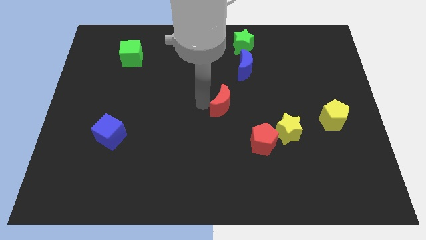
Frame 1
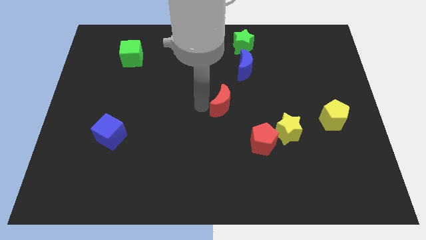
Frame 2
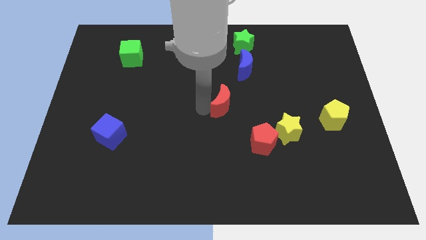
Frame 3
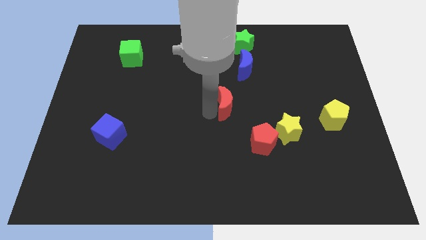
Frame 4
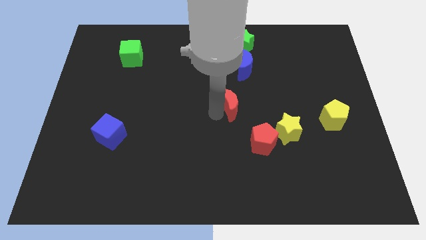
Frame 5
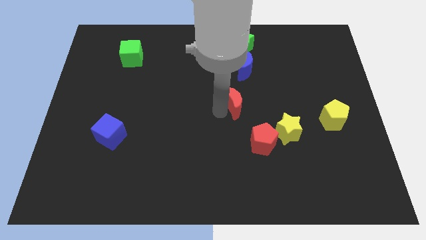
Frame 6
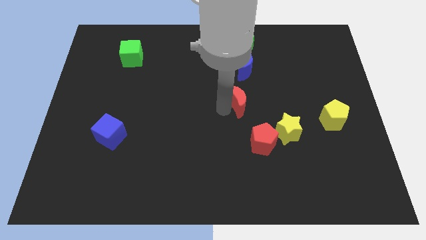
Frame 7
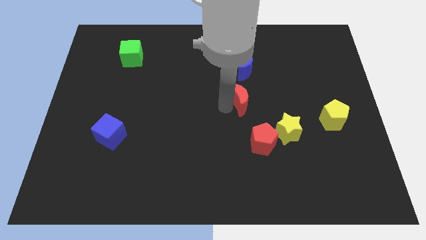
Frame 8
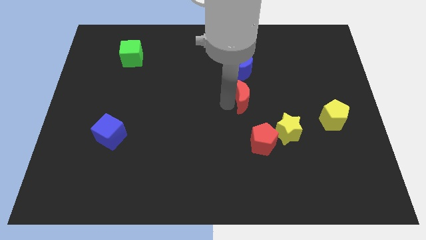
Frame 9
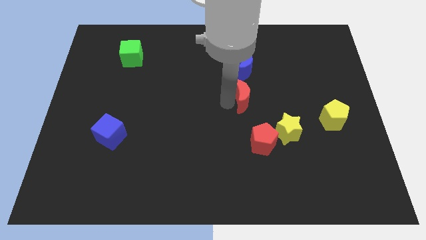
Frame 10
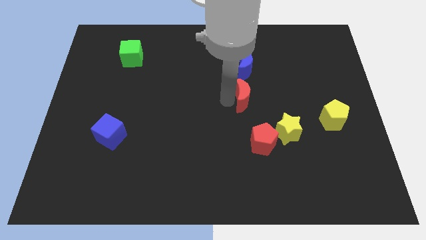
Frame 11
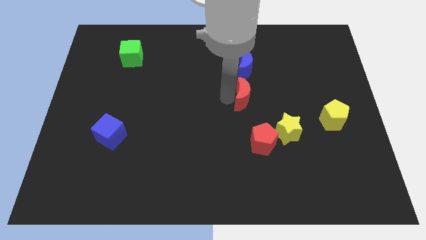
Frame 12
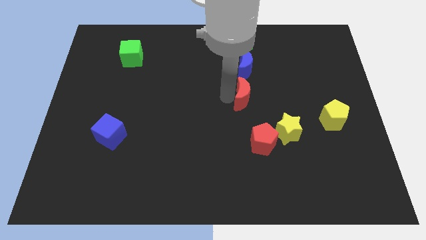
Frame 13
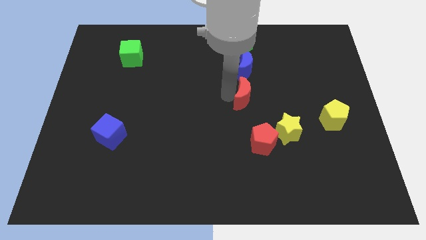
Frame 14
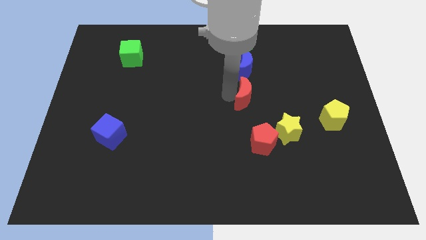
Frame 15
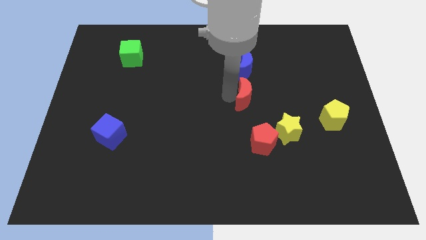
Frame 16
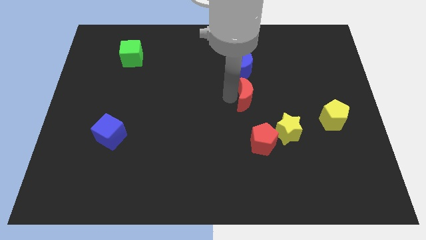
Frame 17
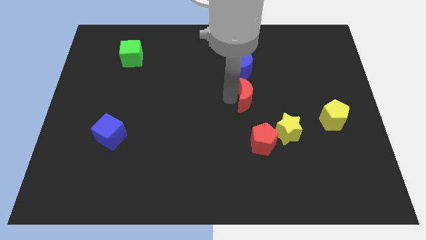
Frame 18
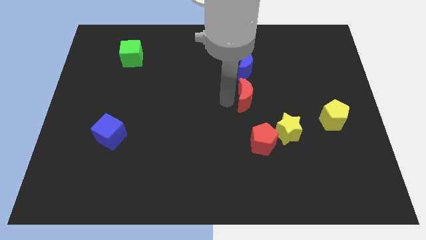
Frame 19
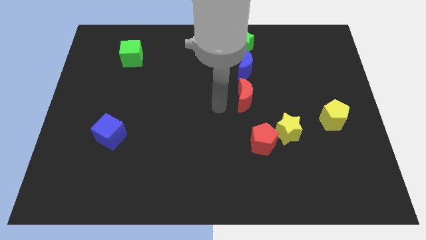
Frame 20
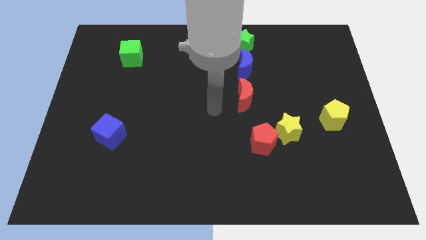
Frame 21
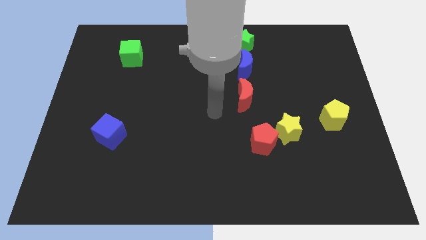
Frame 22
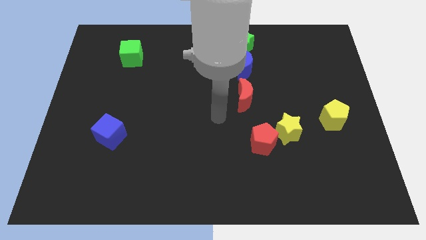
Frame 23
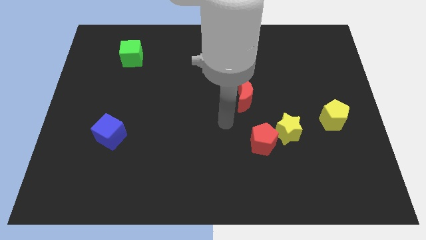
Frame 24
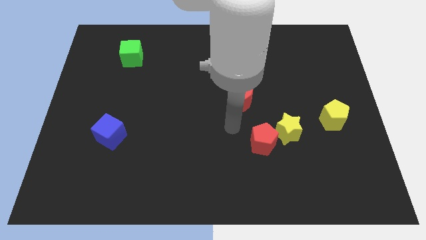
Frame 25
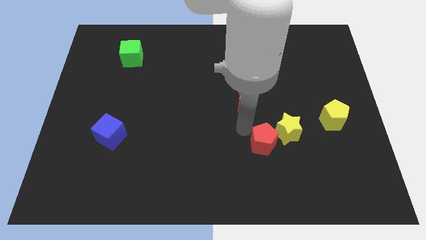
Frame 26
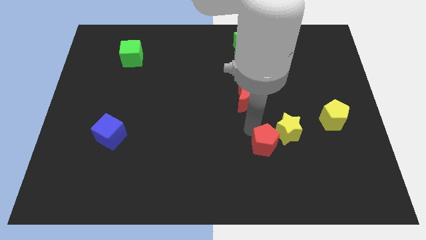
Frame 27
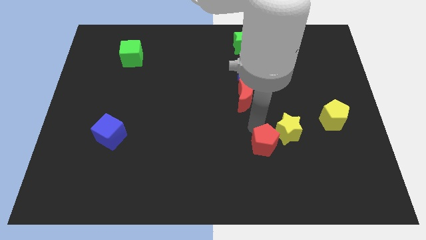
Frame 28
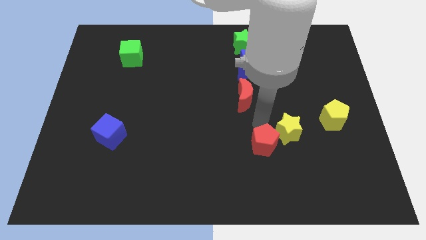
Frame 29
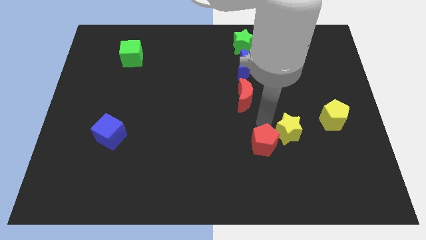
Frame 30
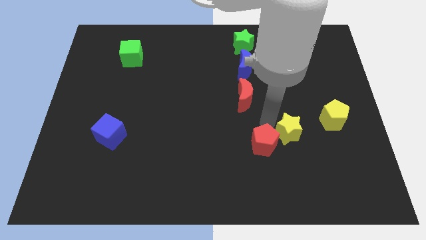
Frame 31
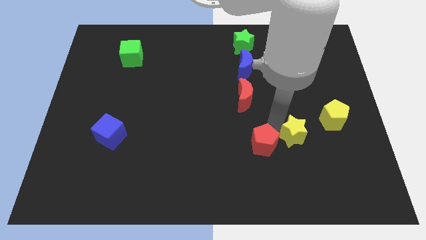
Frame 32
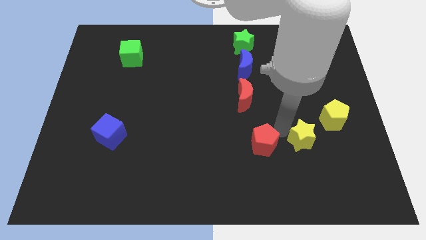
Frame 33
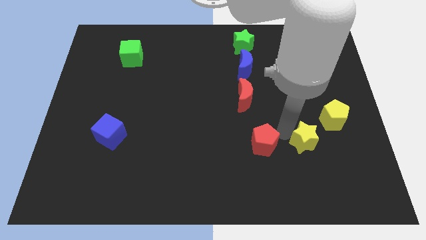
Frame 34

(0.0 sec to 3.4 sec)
separate the red pentagon and yellow star

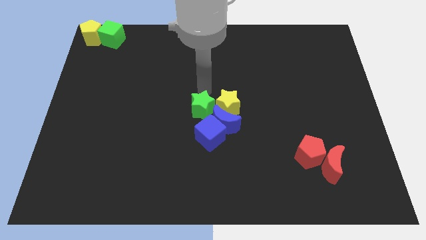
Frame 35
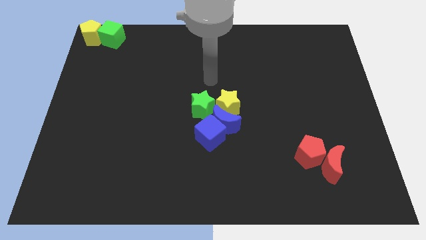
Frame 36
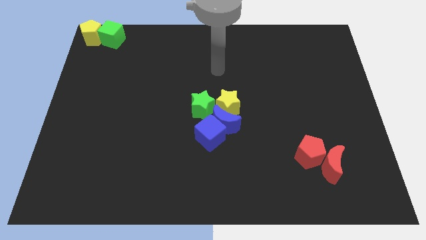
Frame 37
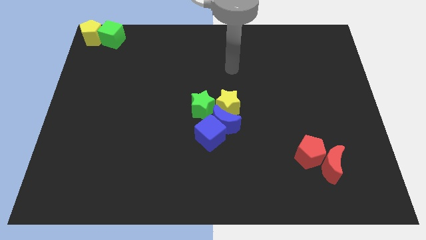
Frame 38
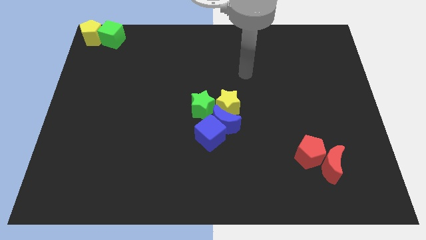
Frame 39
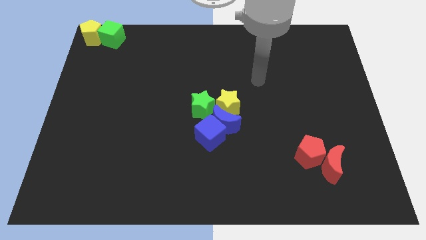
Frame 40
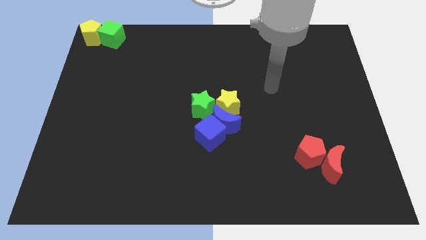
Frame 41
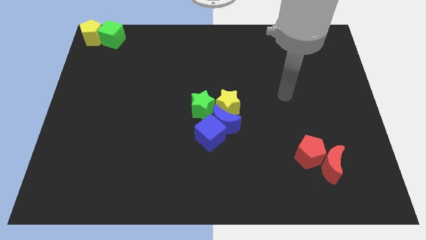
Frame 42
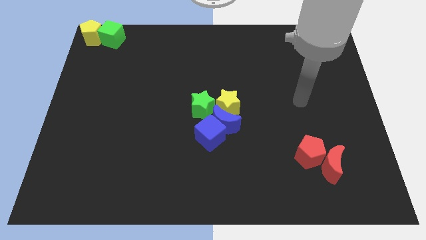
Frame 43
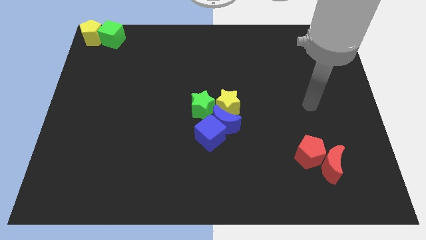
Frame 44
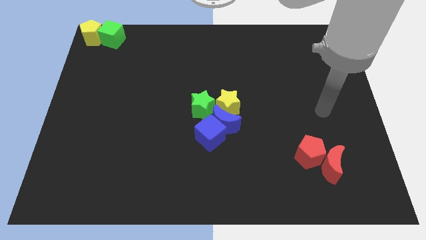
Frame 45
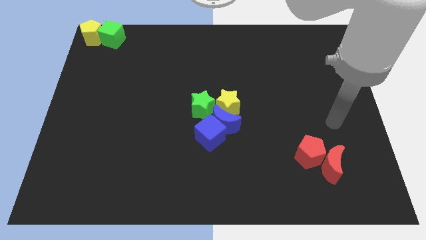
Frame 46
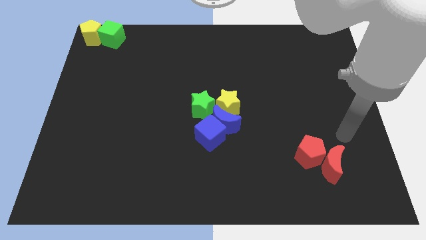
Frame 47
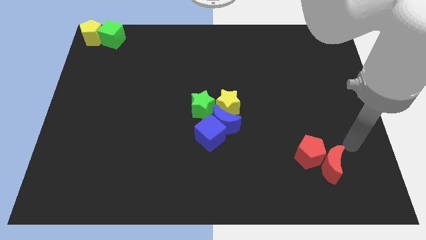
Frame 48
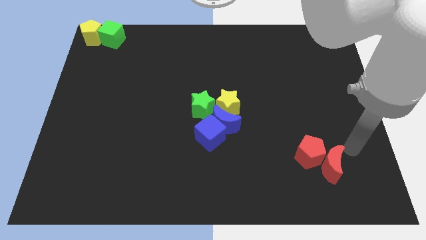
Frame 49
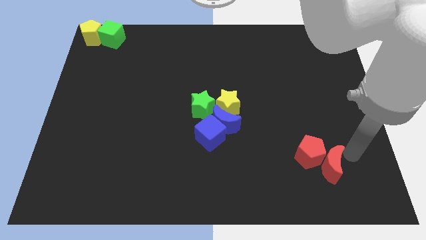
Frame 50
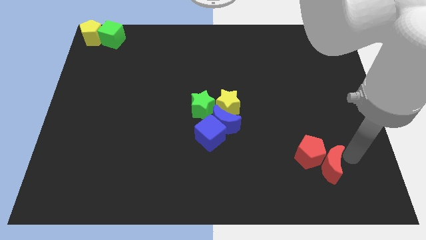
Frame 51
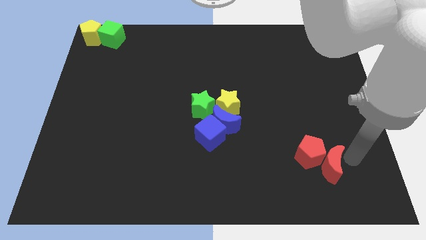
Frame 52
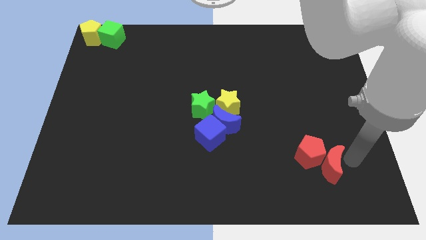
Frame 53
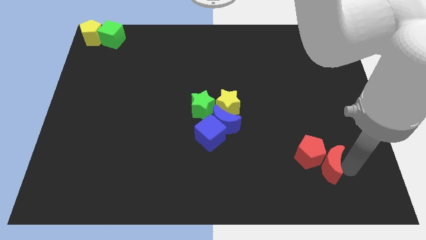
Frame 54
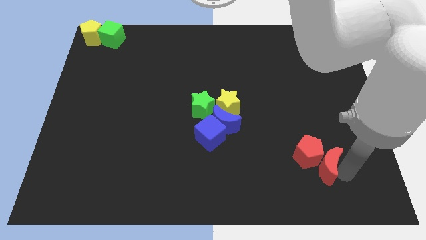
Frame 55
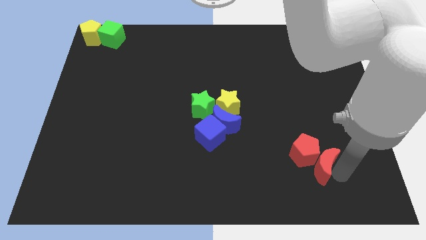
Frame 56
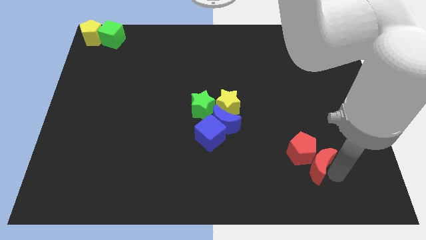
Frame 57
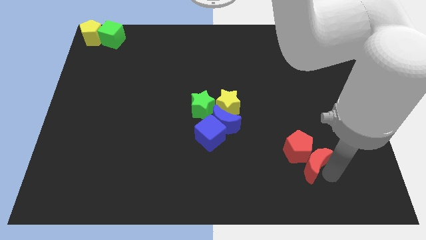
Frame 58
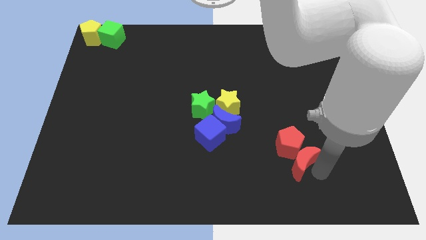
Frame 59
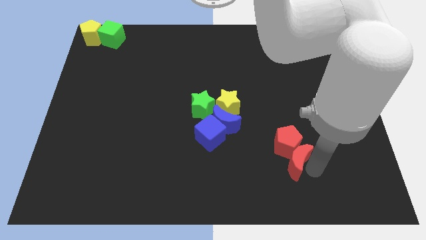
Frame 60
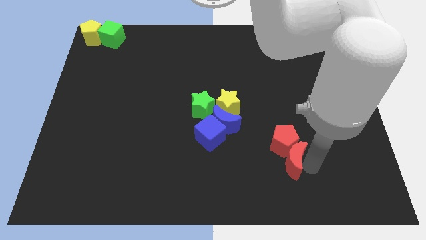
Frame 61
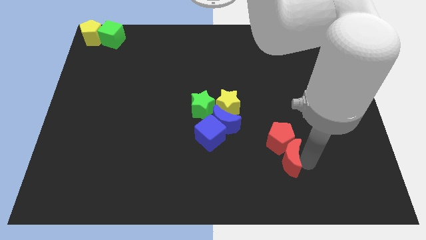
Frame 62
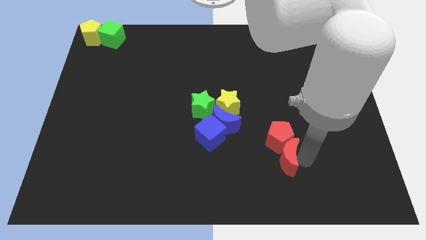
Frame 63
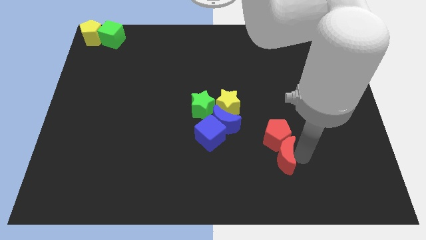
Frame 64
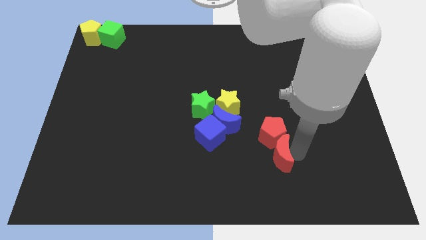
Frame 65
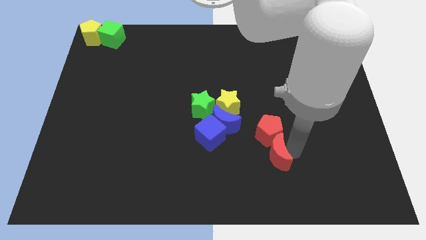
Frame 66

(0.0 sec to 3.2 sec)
move your arm and push the red moon and red pentagon towards the group of blocks

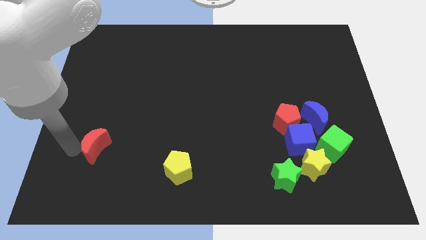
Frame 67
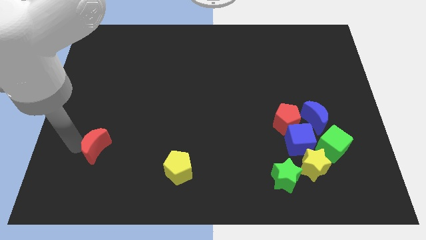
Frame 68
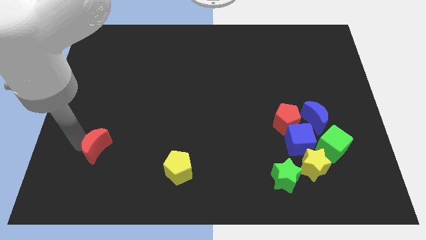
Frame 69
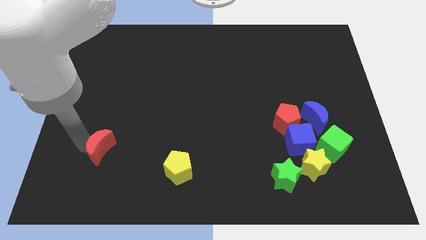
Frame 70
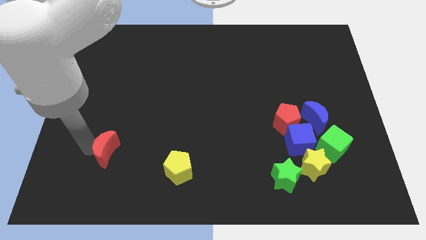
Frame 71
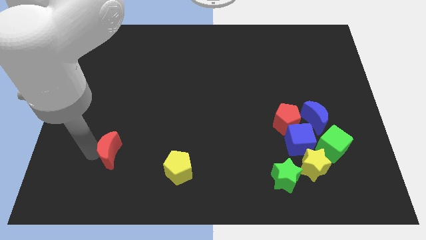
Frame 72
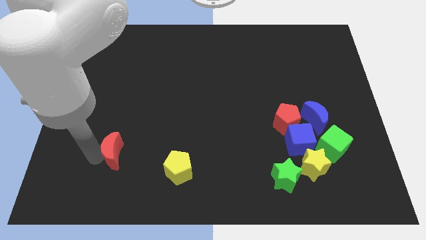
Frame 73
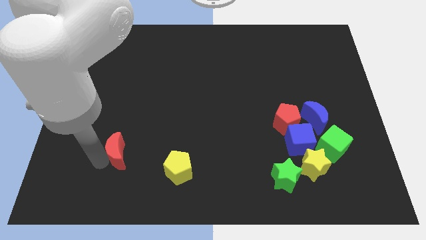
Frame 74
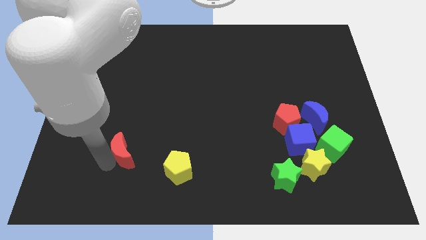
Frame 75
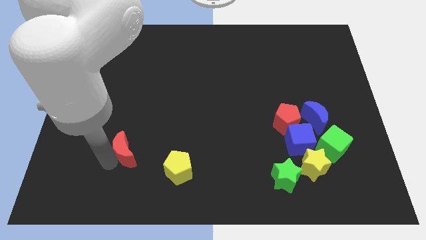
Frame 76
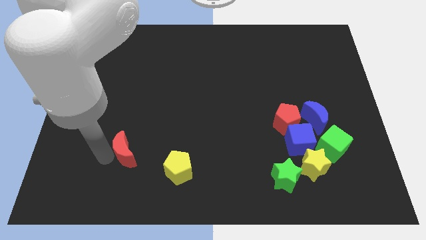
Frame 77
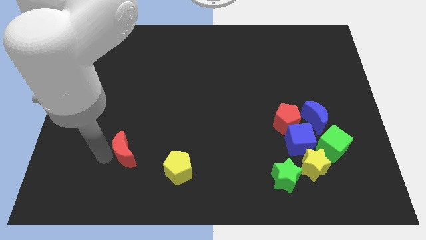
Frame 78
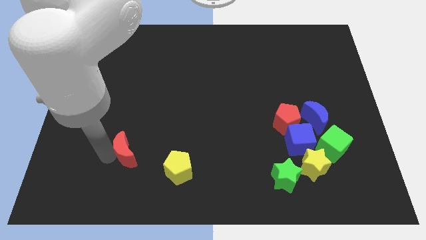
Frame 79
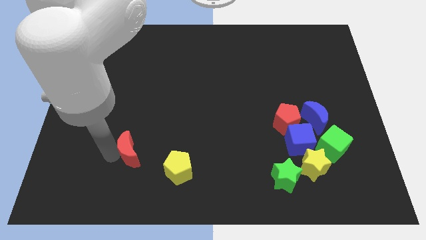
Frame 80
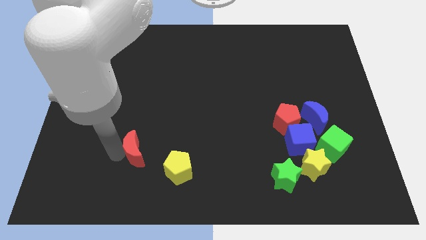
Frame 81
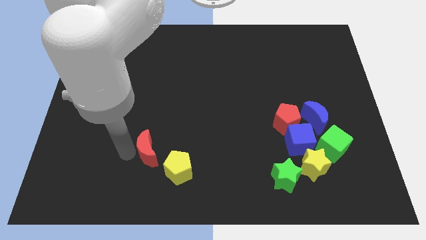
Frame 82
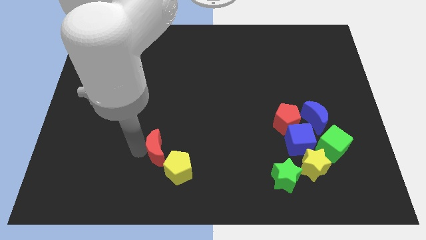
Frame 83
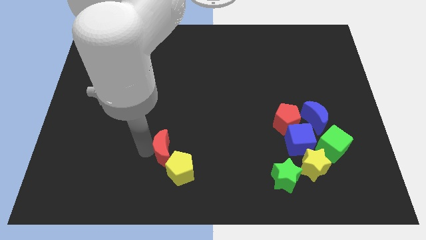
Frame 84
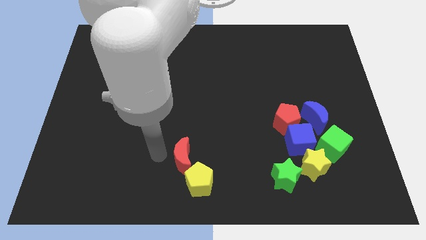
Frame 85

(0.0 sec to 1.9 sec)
move the red moon into the yellow pentagon

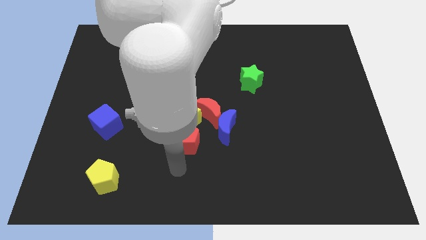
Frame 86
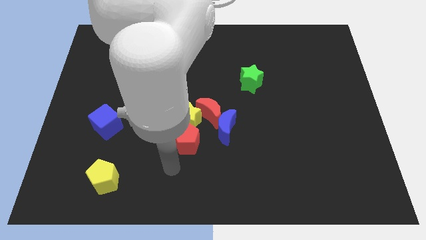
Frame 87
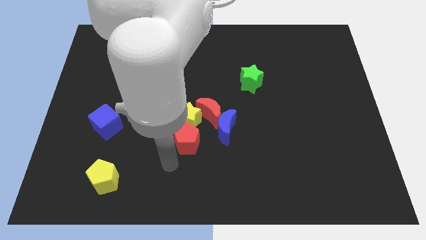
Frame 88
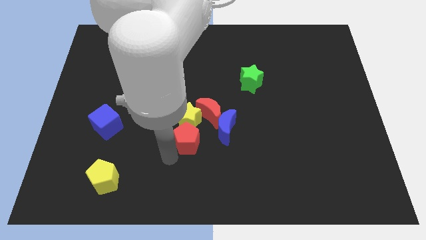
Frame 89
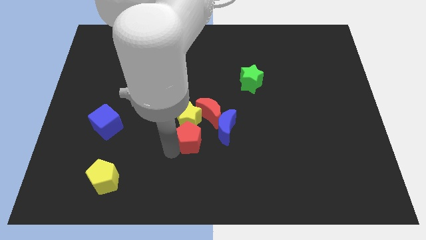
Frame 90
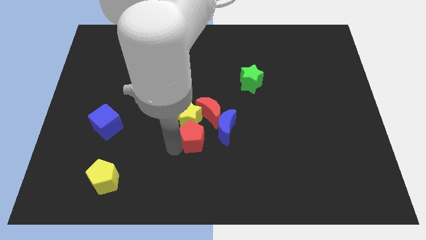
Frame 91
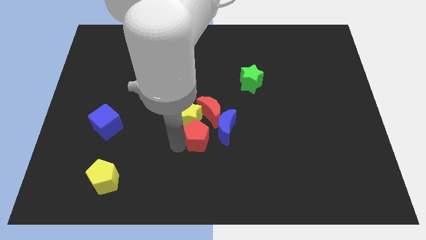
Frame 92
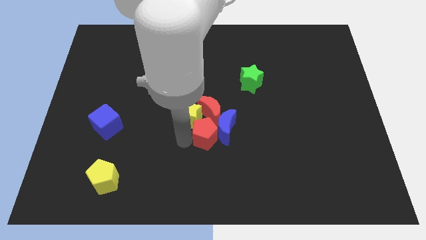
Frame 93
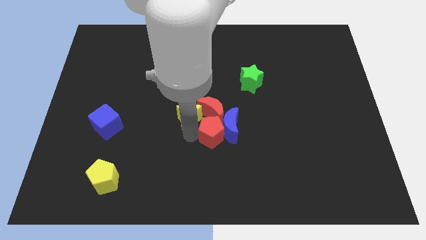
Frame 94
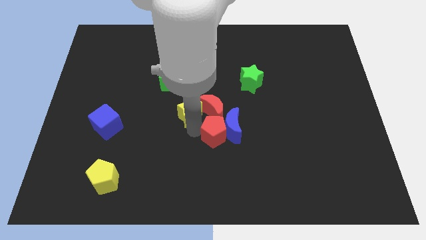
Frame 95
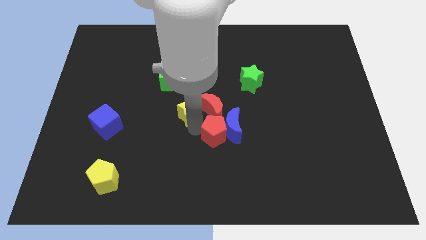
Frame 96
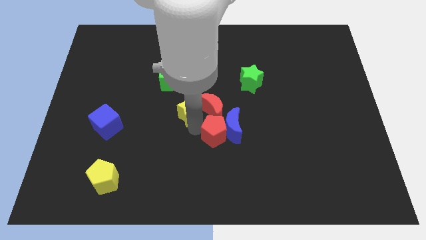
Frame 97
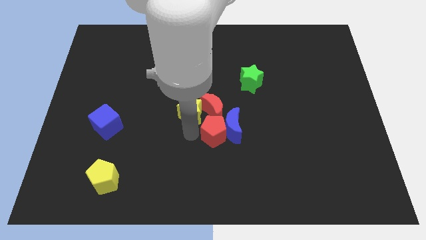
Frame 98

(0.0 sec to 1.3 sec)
move red pentagon into blue moon
